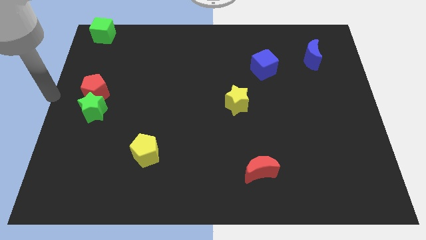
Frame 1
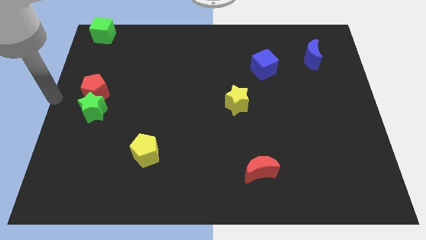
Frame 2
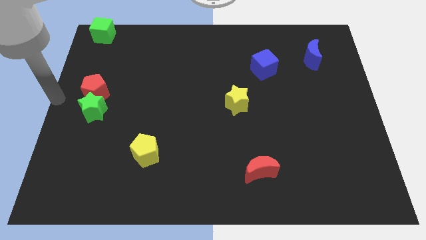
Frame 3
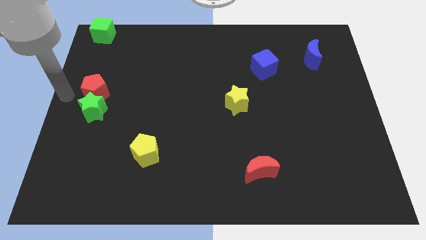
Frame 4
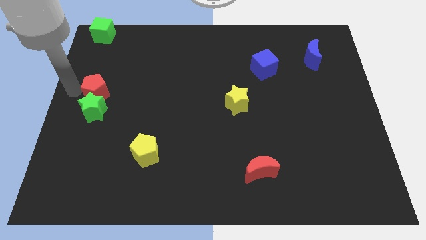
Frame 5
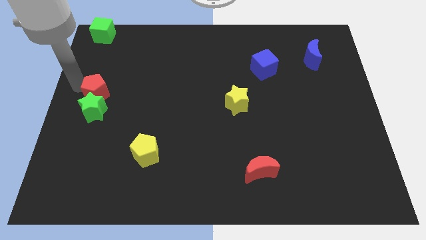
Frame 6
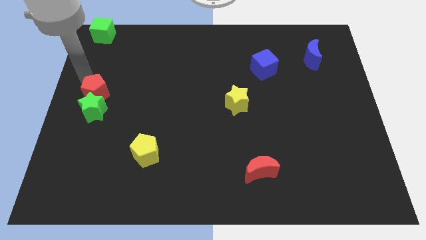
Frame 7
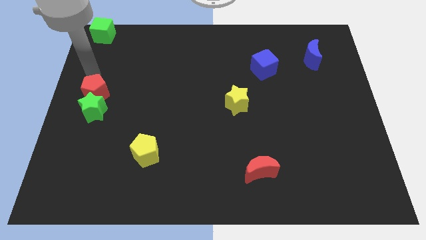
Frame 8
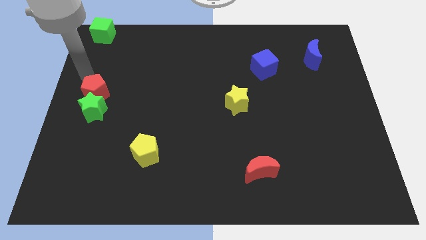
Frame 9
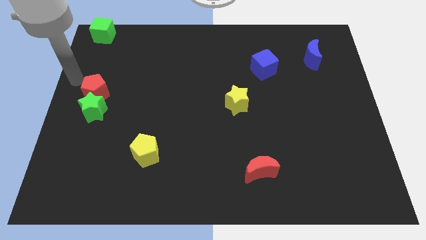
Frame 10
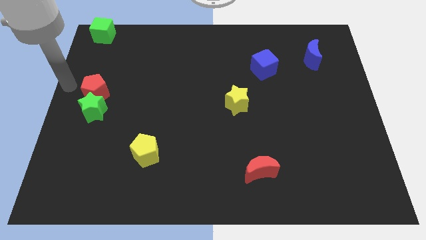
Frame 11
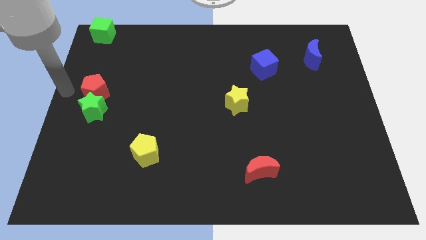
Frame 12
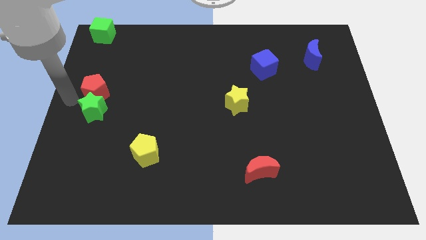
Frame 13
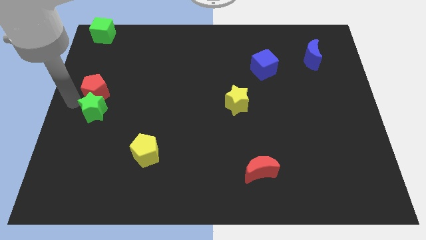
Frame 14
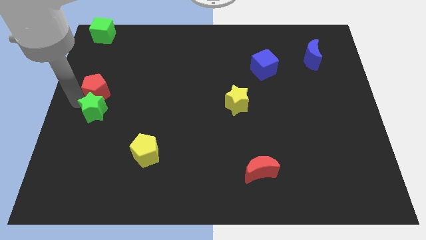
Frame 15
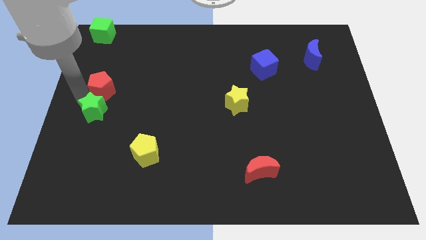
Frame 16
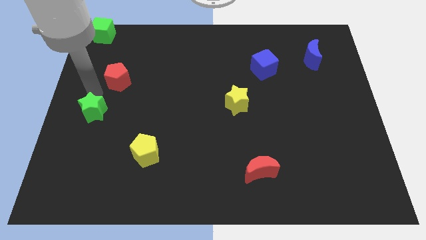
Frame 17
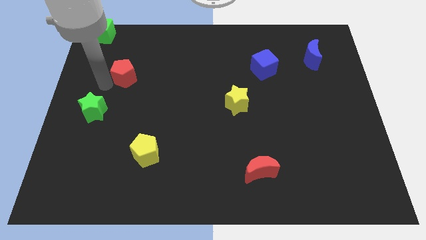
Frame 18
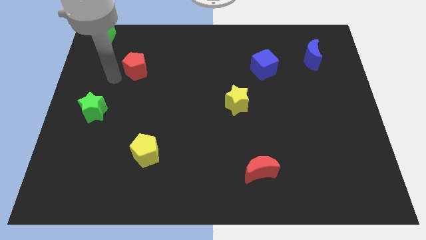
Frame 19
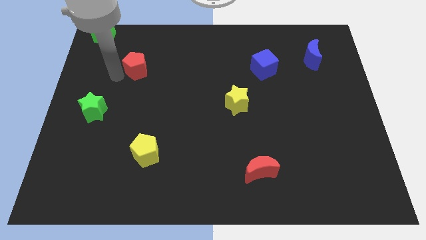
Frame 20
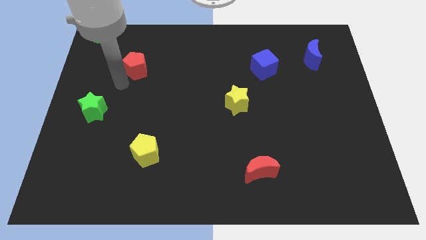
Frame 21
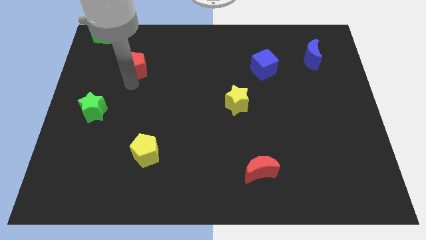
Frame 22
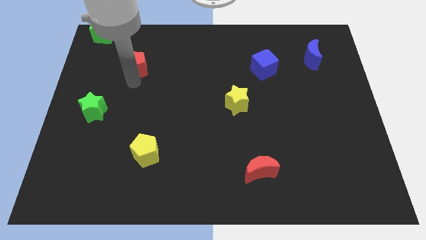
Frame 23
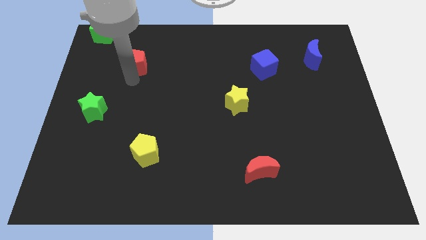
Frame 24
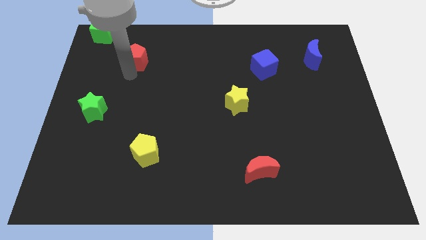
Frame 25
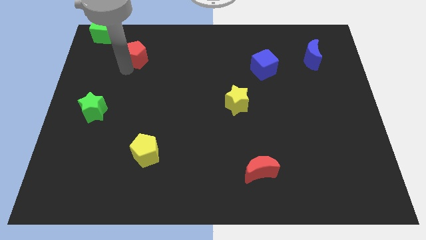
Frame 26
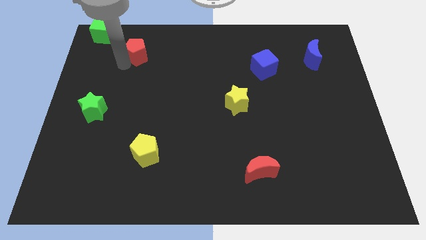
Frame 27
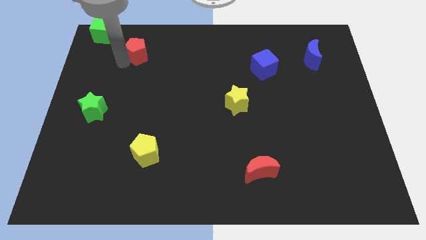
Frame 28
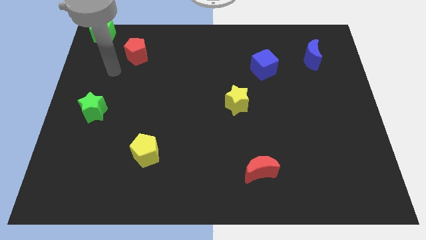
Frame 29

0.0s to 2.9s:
push red pentagon at bottom right to green cube

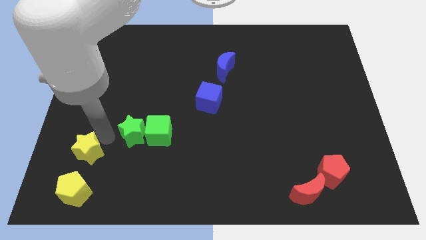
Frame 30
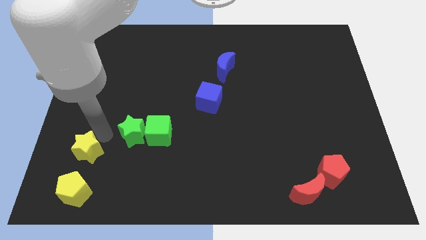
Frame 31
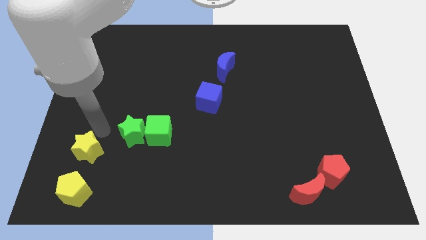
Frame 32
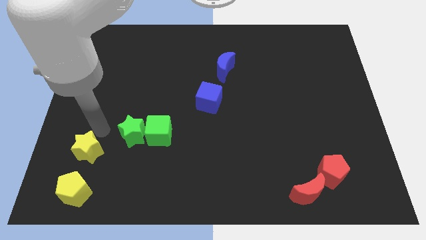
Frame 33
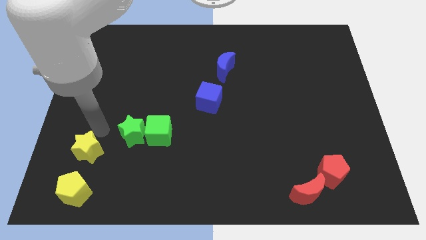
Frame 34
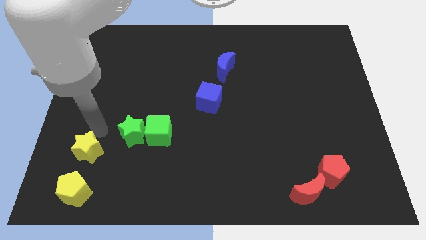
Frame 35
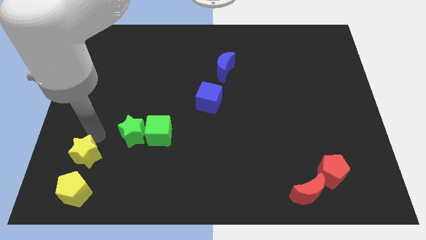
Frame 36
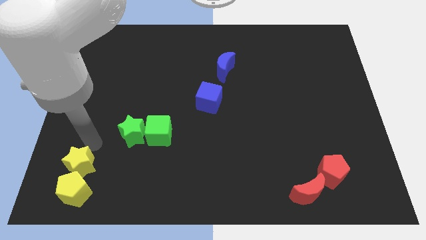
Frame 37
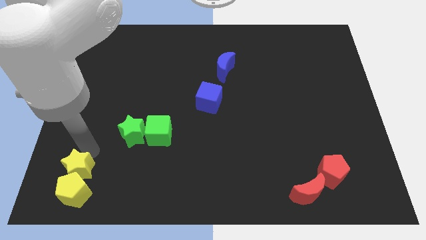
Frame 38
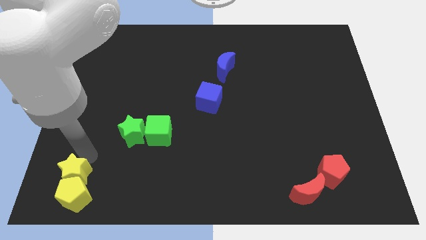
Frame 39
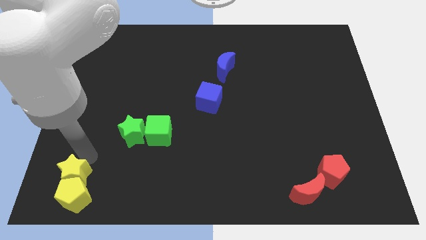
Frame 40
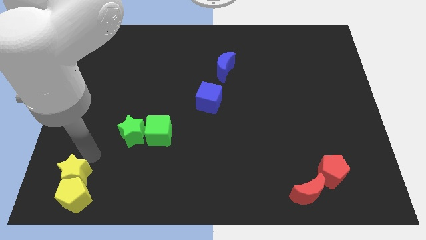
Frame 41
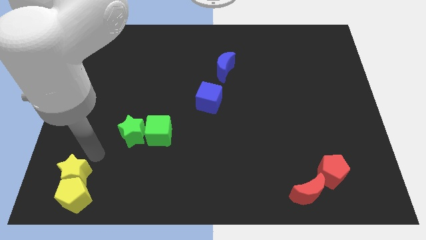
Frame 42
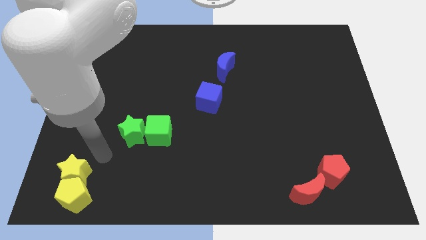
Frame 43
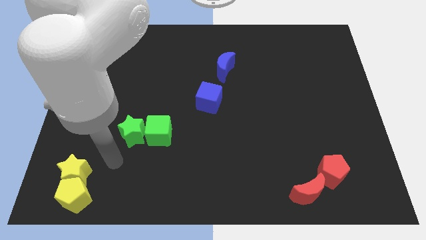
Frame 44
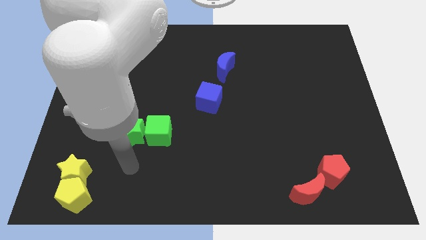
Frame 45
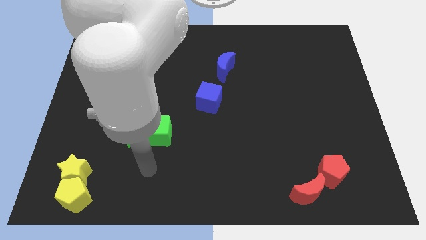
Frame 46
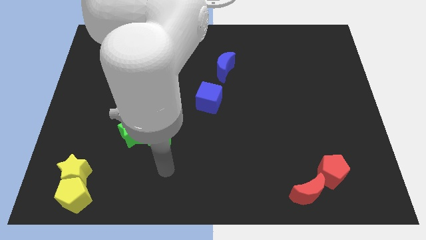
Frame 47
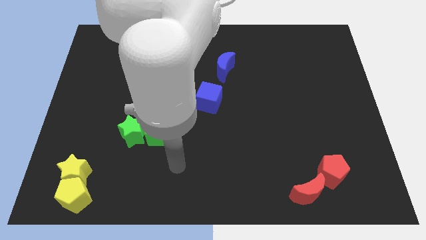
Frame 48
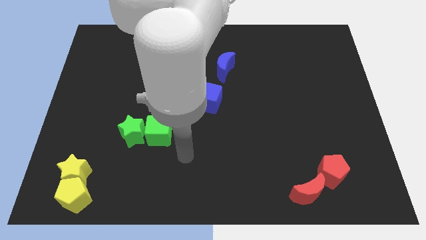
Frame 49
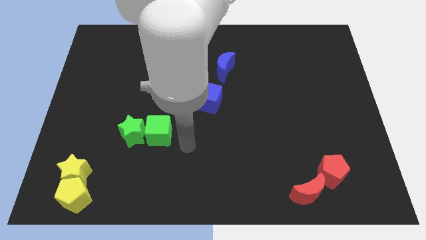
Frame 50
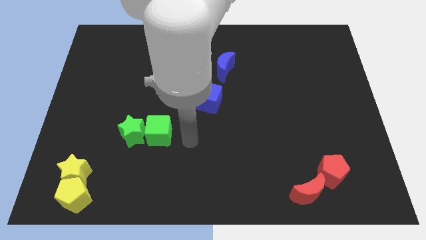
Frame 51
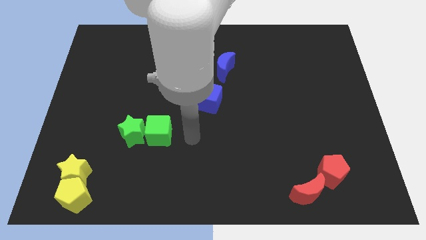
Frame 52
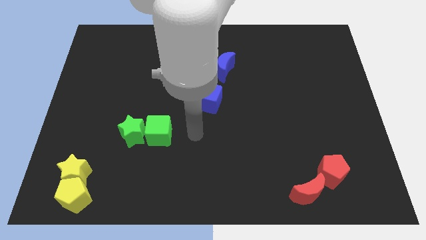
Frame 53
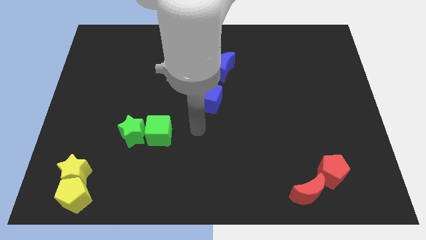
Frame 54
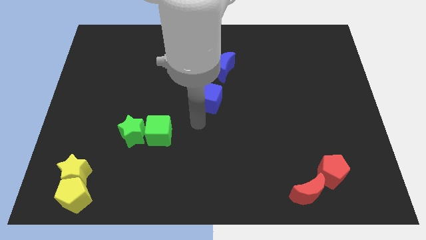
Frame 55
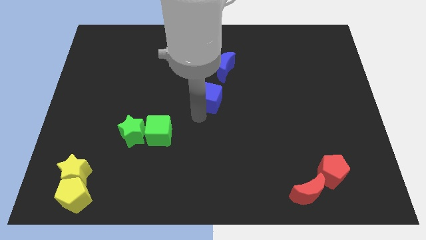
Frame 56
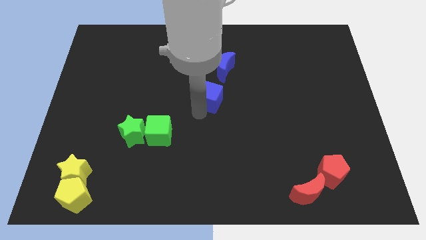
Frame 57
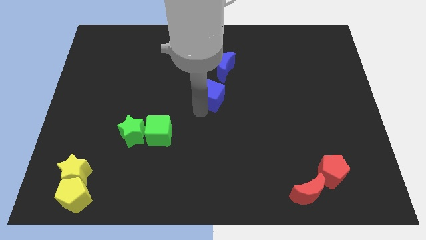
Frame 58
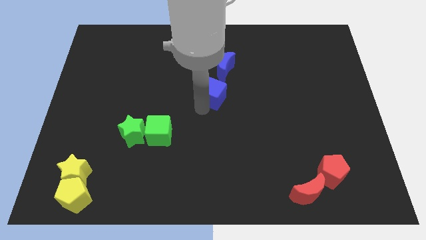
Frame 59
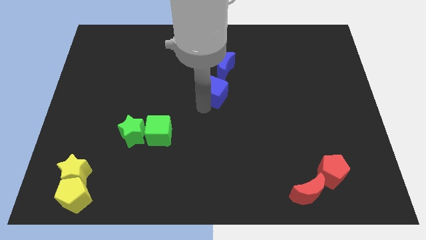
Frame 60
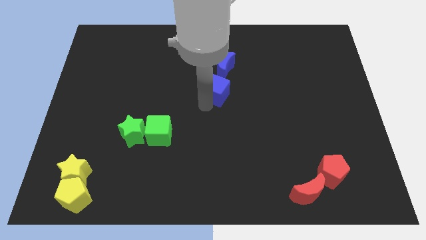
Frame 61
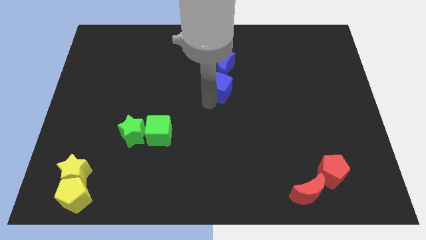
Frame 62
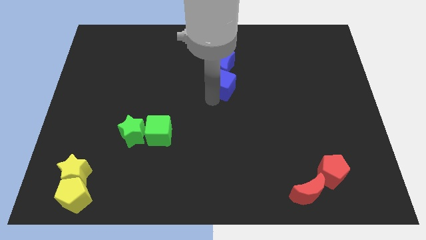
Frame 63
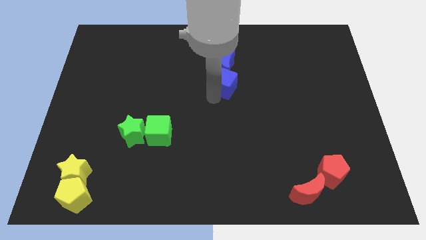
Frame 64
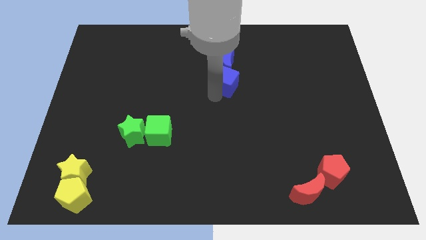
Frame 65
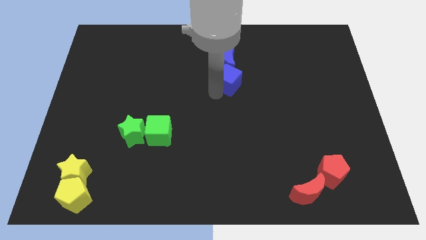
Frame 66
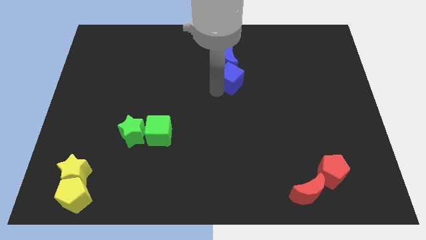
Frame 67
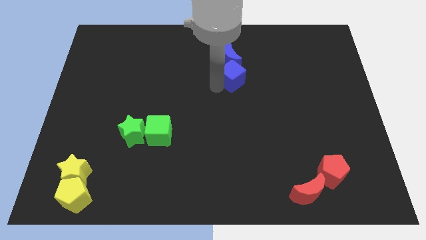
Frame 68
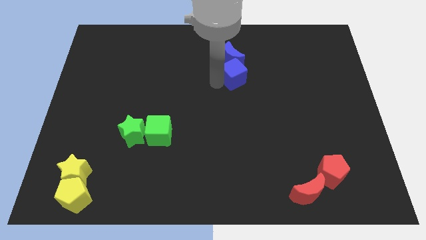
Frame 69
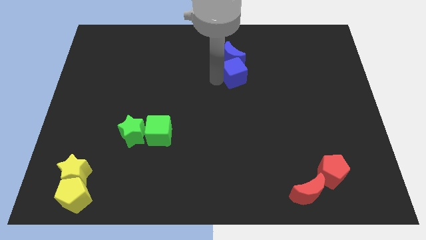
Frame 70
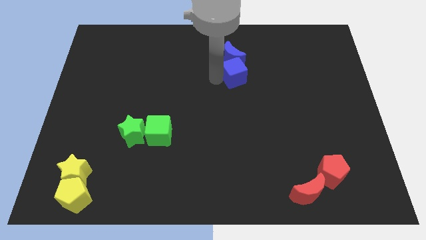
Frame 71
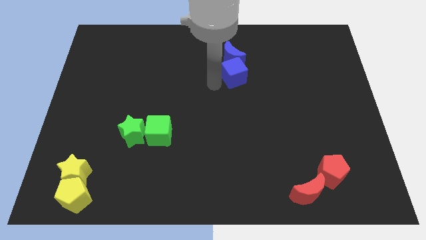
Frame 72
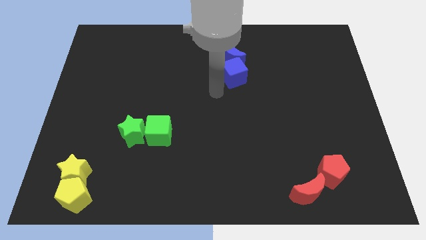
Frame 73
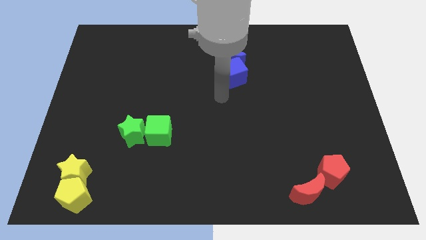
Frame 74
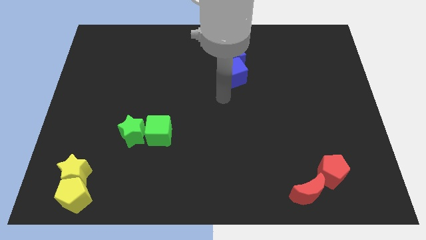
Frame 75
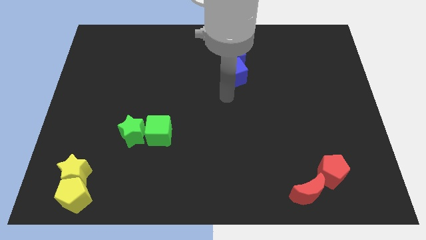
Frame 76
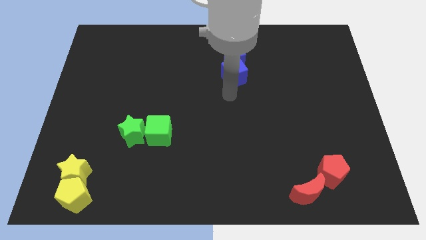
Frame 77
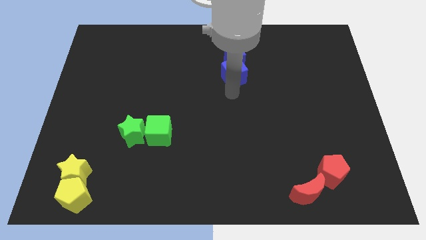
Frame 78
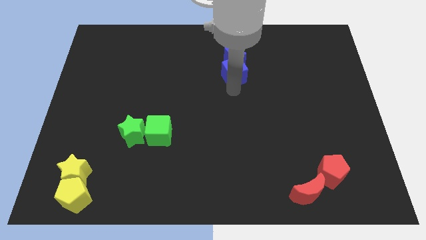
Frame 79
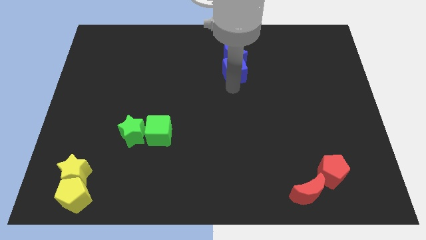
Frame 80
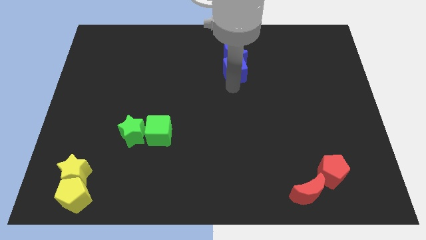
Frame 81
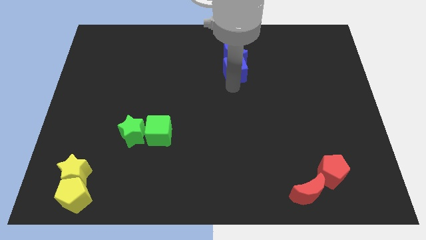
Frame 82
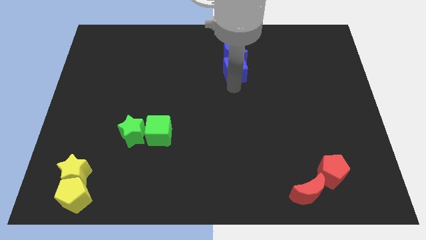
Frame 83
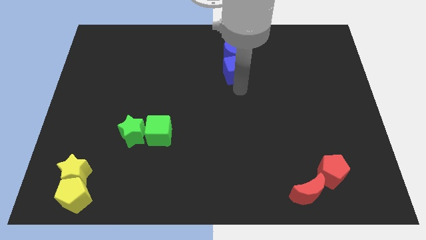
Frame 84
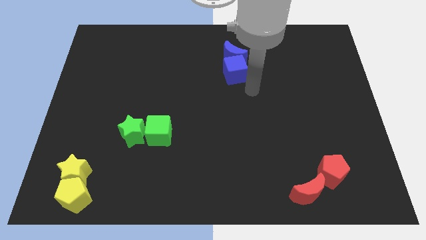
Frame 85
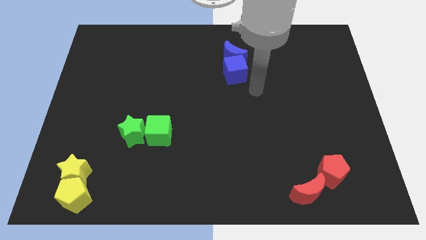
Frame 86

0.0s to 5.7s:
drag the yellow star towards the yellow pentagon

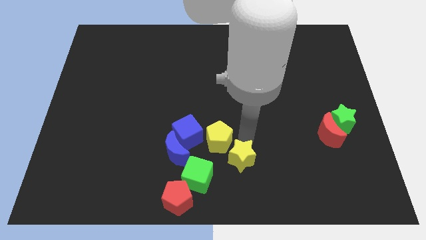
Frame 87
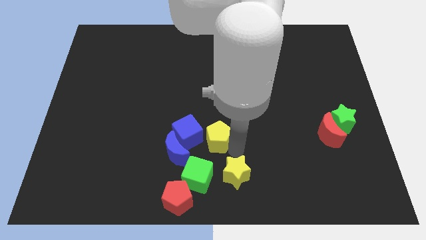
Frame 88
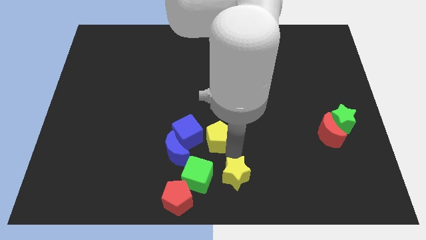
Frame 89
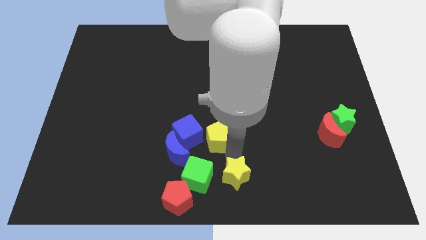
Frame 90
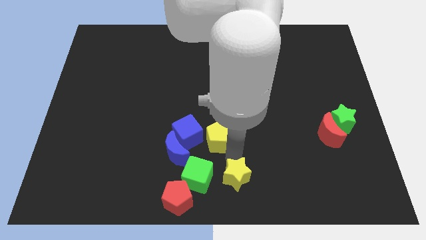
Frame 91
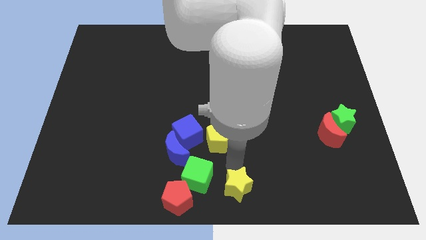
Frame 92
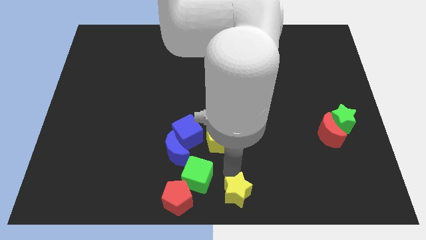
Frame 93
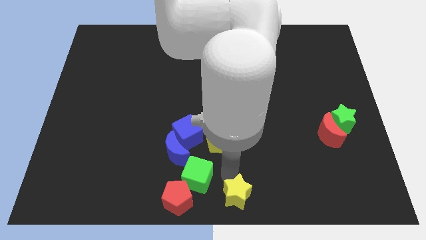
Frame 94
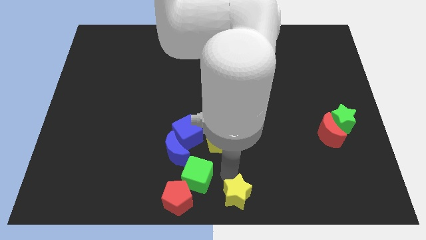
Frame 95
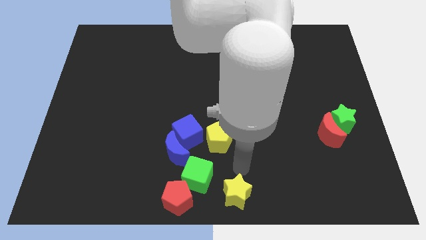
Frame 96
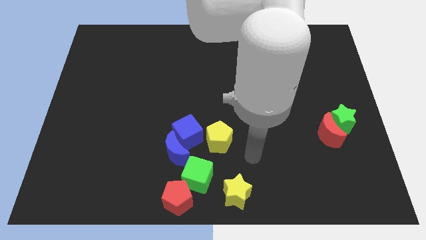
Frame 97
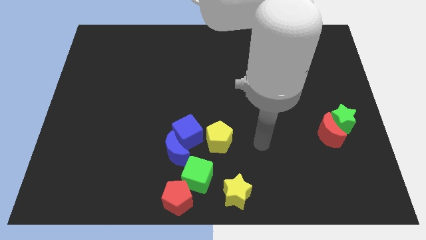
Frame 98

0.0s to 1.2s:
put the yellow star at the bottom center of the board
